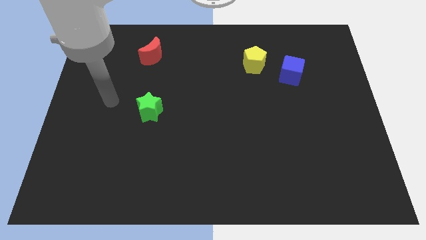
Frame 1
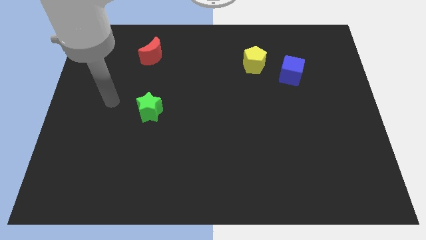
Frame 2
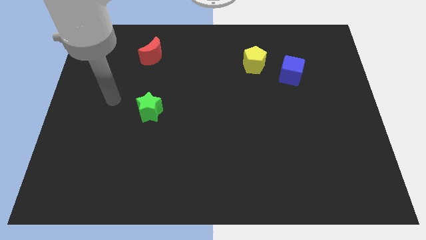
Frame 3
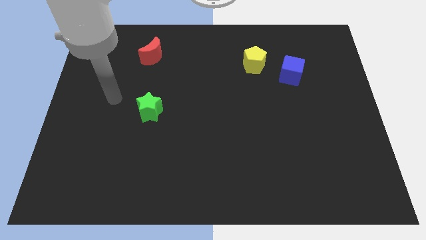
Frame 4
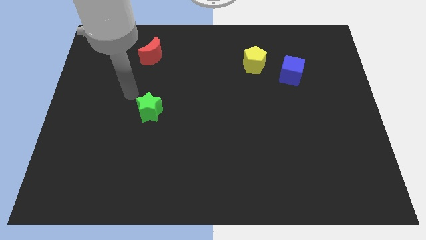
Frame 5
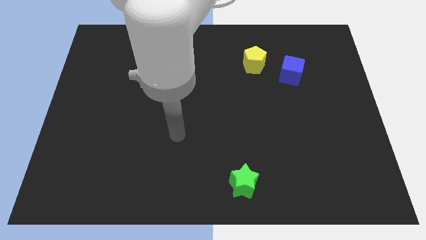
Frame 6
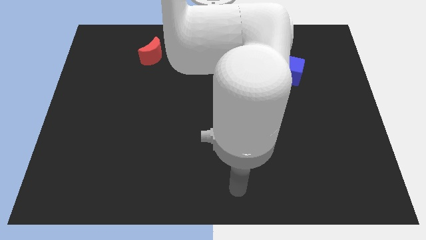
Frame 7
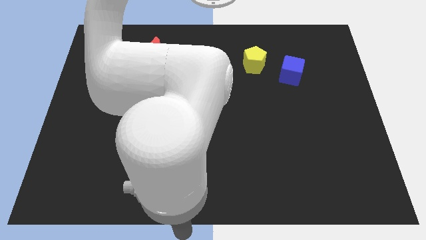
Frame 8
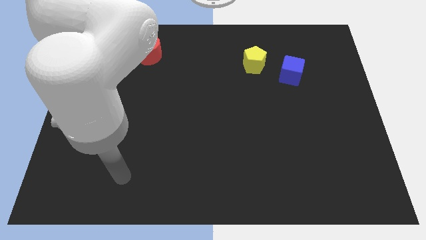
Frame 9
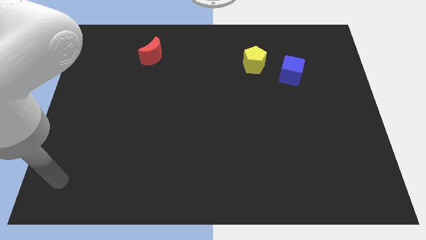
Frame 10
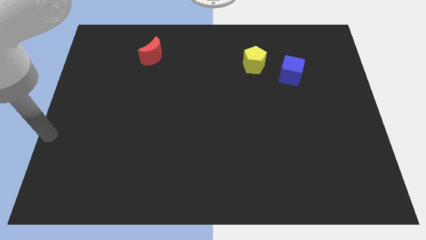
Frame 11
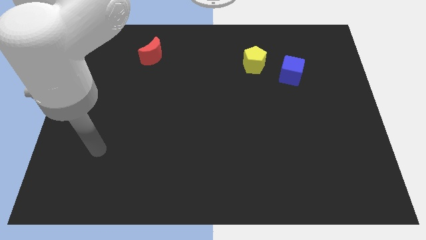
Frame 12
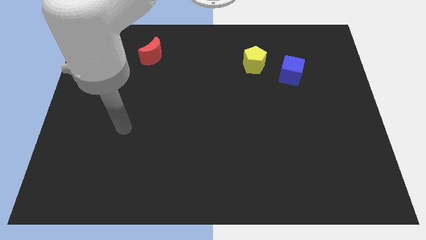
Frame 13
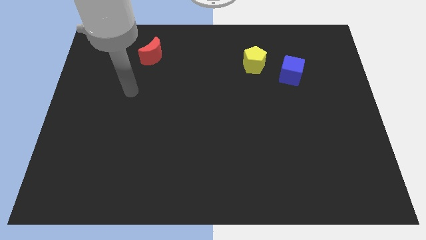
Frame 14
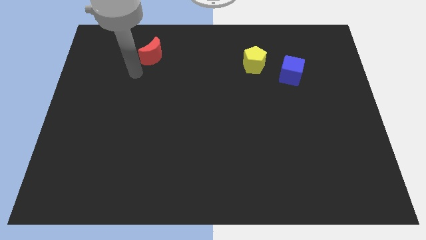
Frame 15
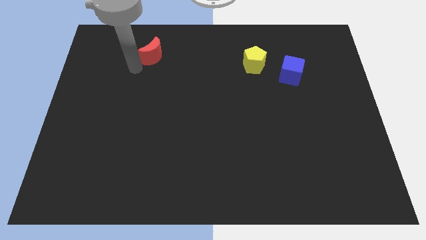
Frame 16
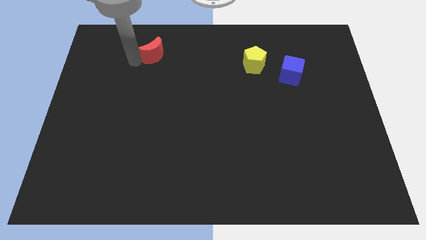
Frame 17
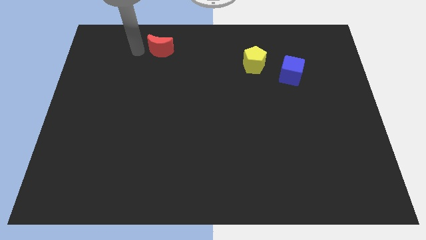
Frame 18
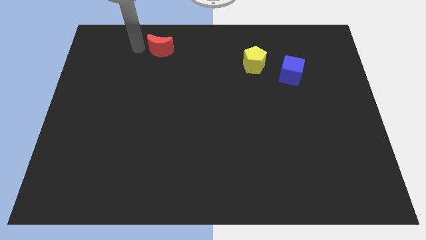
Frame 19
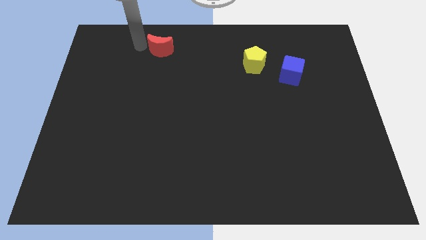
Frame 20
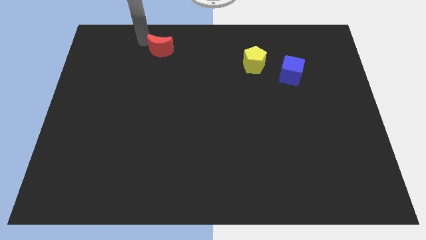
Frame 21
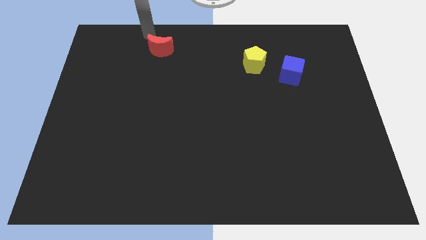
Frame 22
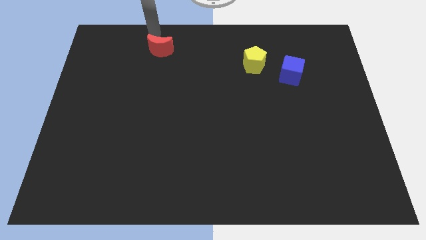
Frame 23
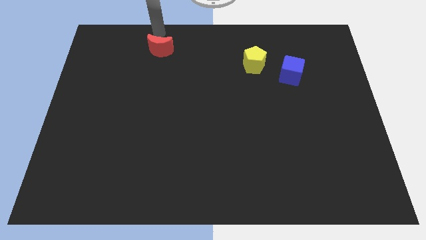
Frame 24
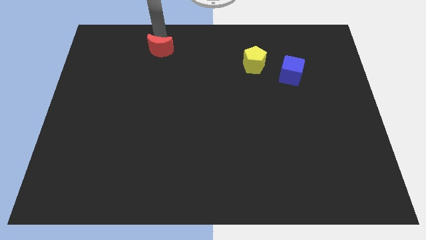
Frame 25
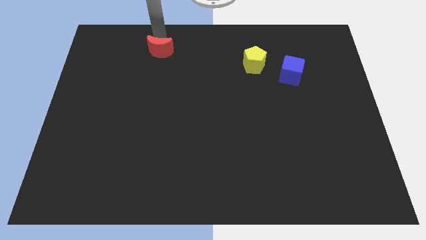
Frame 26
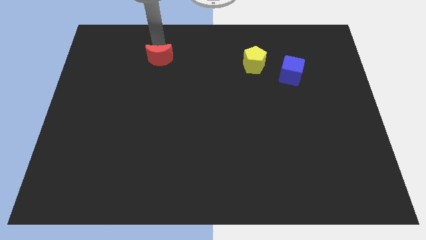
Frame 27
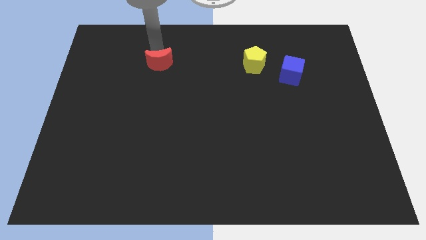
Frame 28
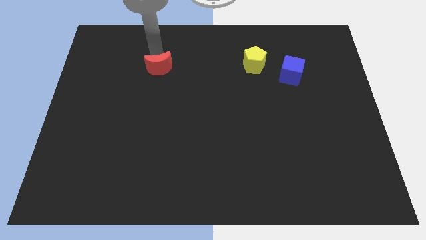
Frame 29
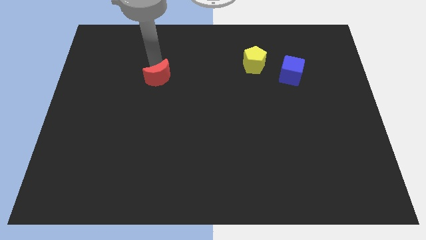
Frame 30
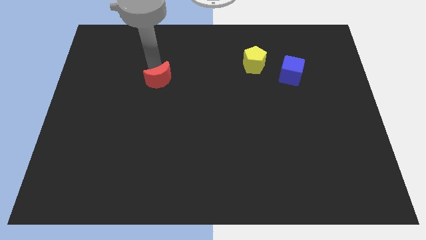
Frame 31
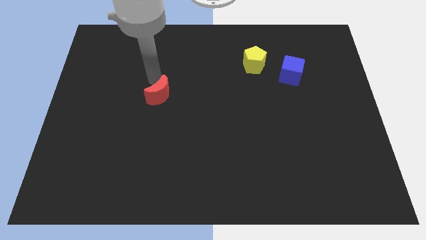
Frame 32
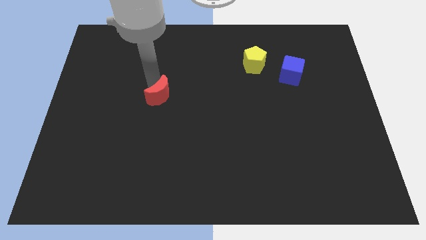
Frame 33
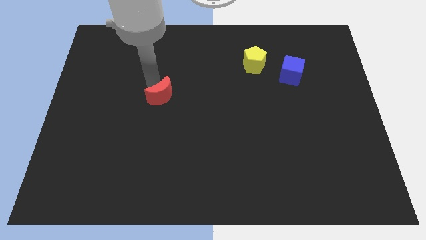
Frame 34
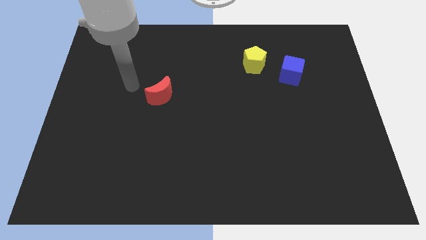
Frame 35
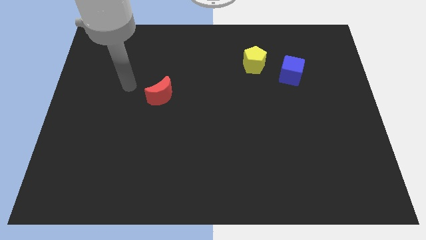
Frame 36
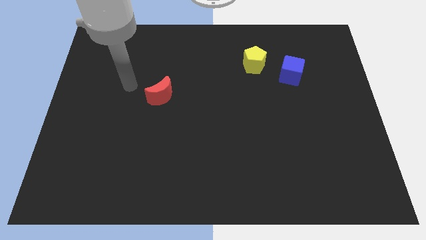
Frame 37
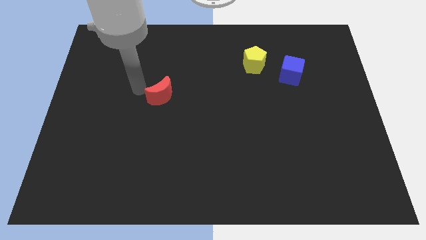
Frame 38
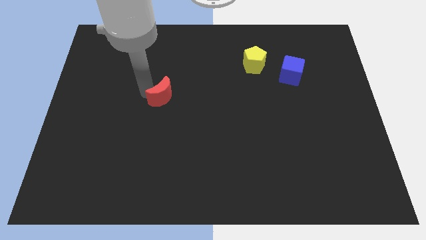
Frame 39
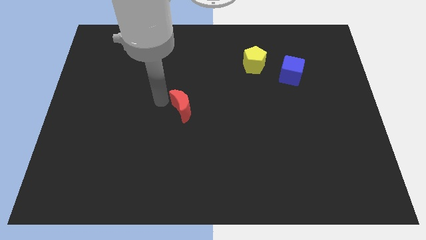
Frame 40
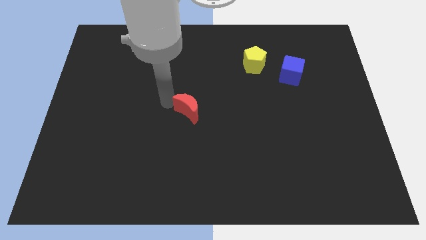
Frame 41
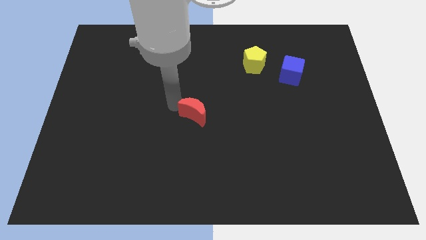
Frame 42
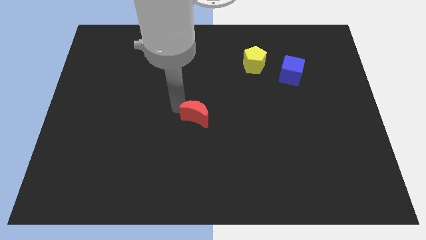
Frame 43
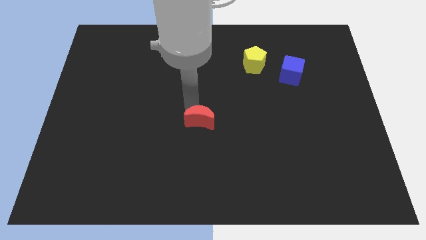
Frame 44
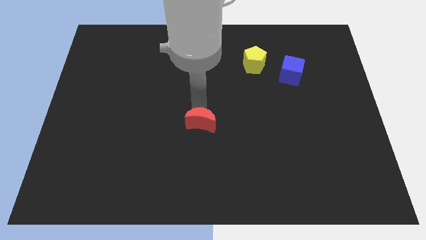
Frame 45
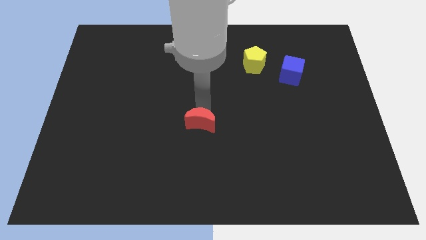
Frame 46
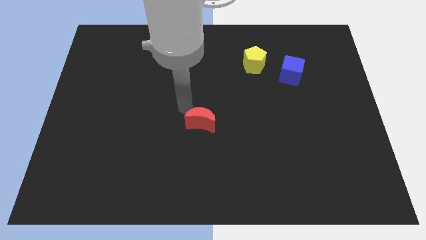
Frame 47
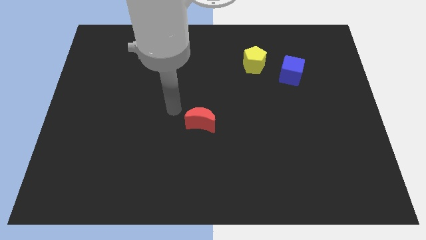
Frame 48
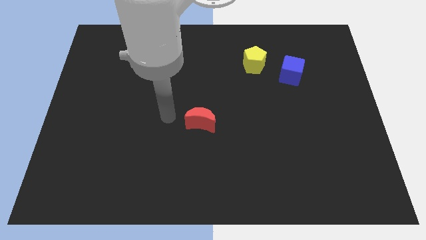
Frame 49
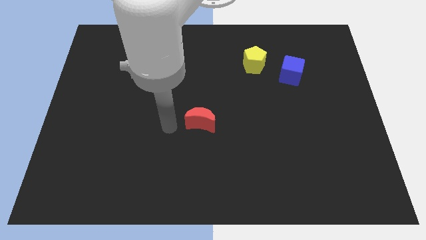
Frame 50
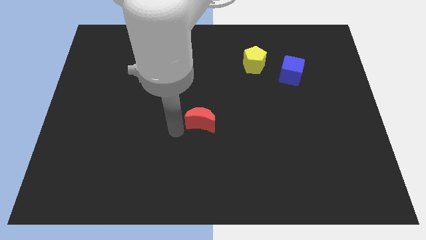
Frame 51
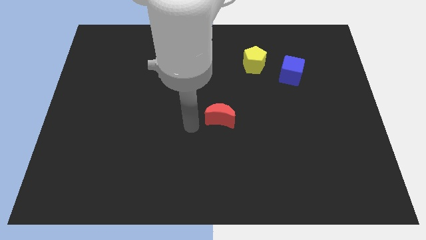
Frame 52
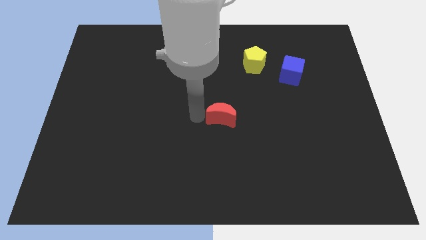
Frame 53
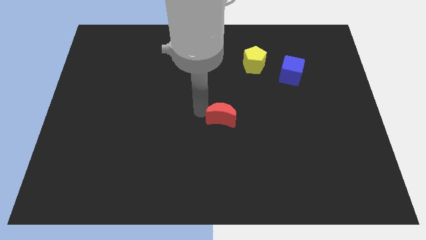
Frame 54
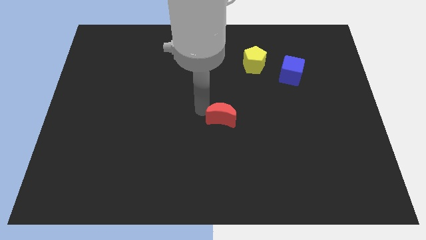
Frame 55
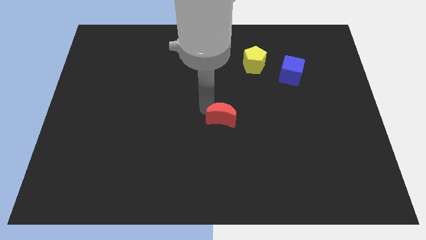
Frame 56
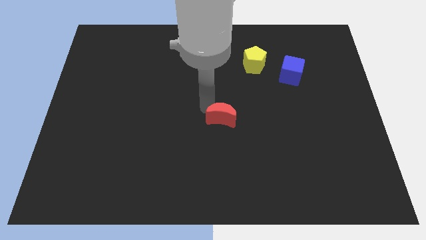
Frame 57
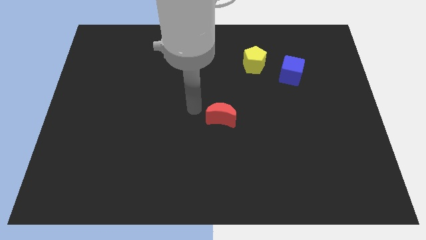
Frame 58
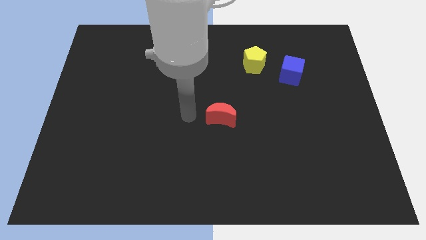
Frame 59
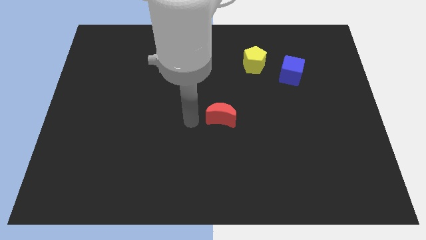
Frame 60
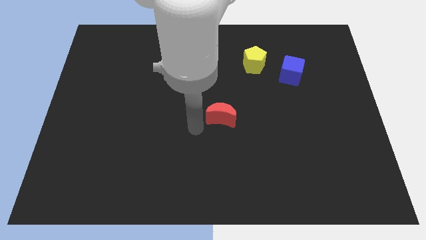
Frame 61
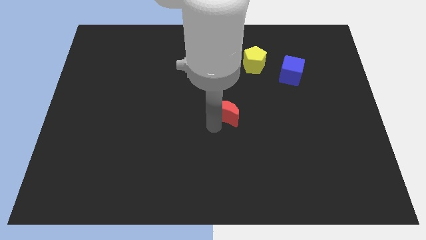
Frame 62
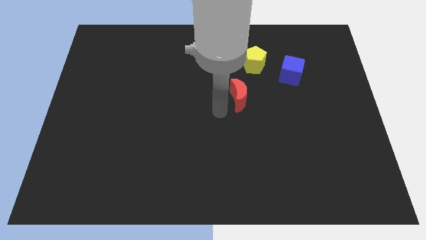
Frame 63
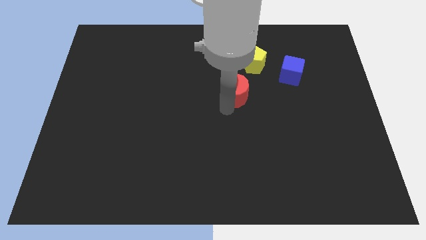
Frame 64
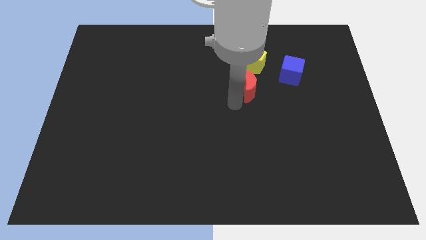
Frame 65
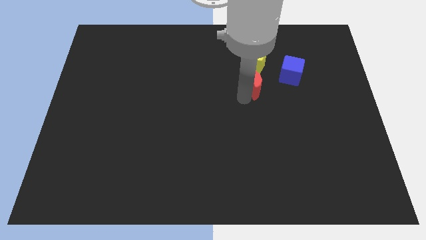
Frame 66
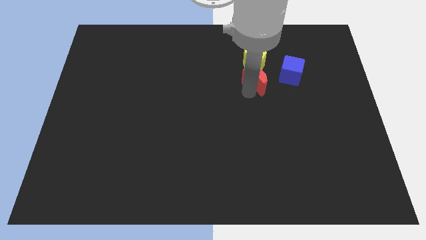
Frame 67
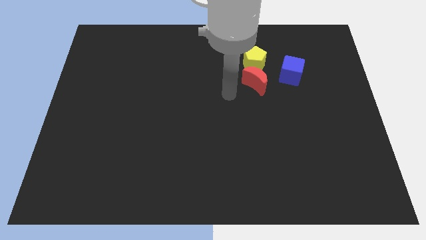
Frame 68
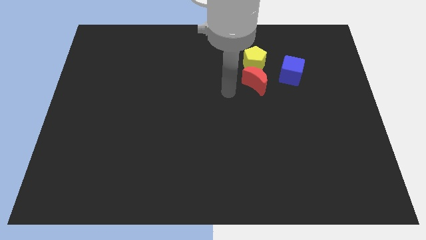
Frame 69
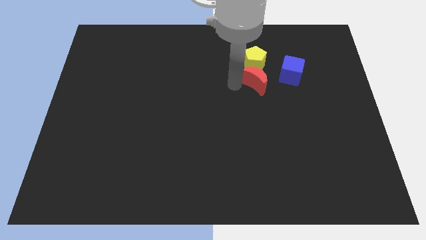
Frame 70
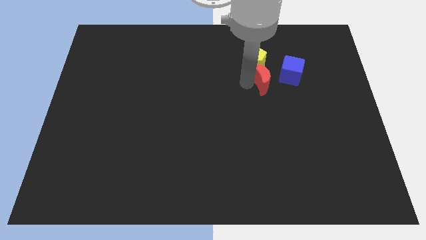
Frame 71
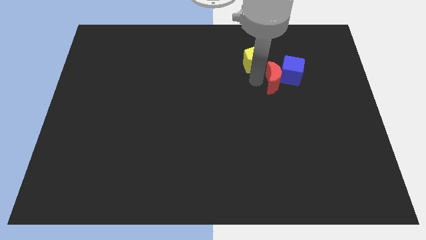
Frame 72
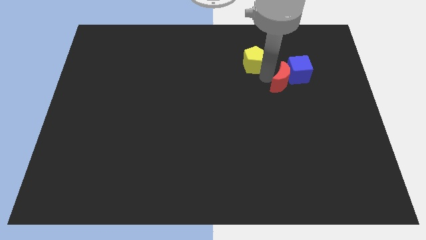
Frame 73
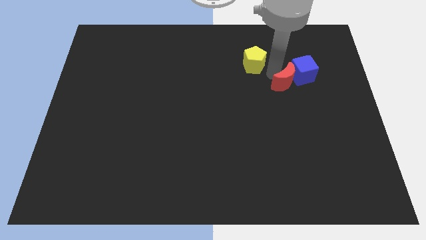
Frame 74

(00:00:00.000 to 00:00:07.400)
put the red block next to the blue block

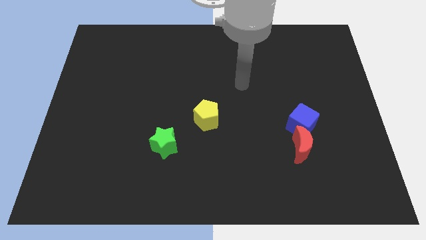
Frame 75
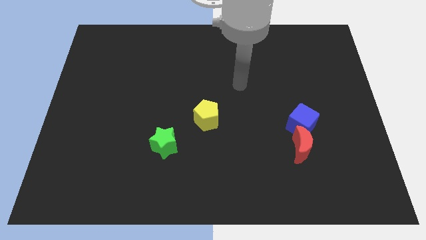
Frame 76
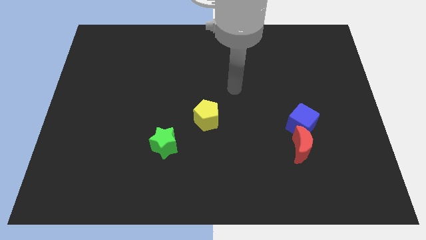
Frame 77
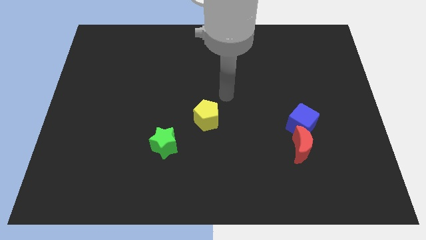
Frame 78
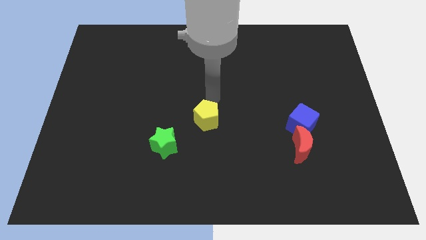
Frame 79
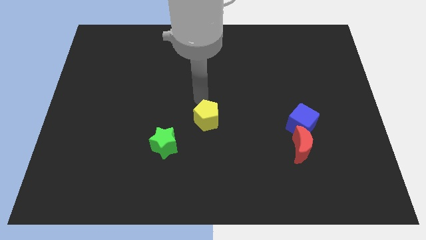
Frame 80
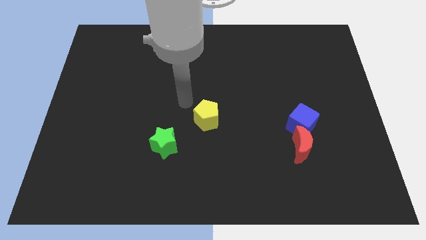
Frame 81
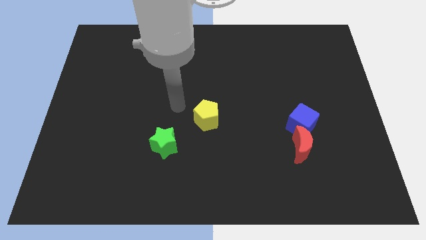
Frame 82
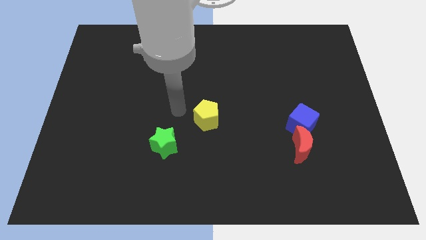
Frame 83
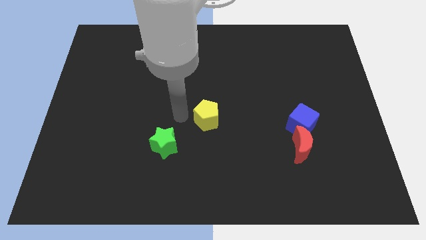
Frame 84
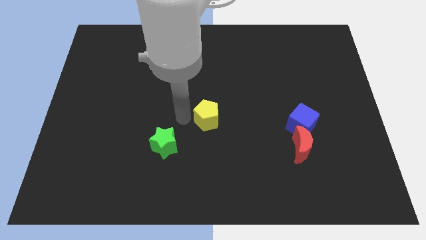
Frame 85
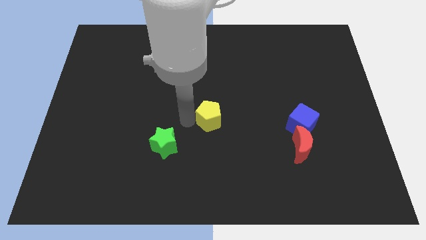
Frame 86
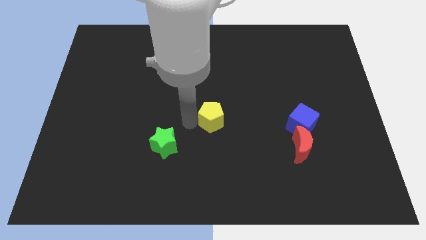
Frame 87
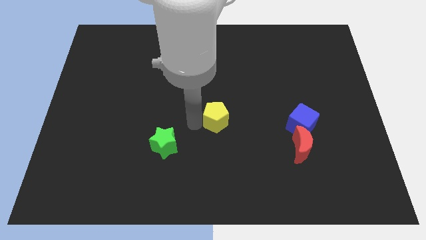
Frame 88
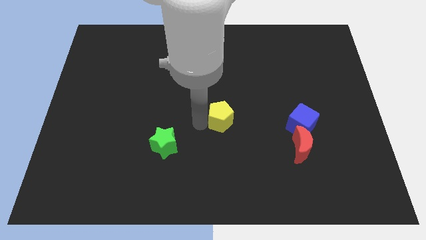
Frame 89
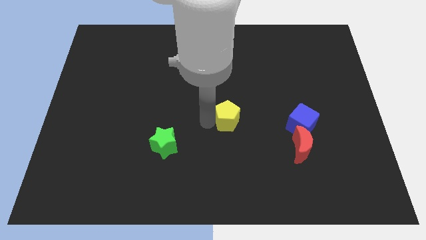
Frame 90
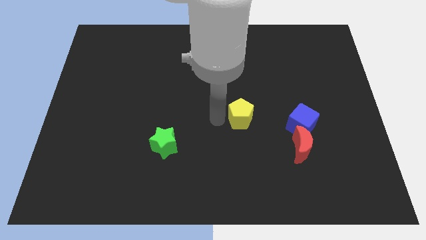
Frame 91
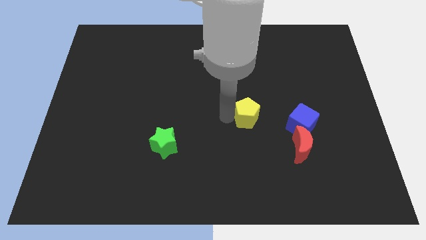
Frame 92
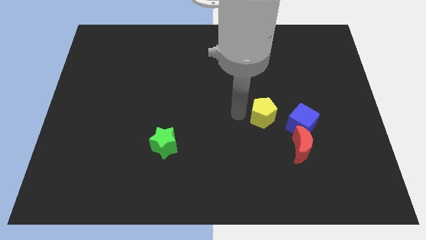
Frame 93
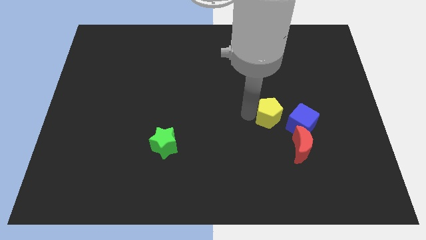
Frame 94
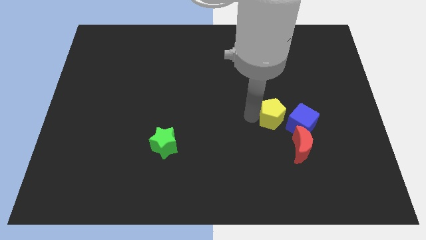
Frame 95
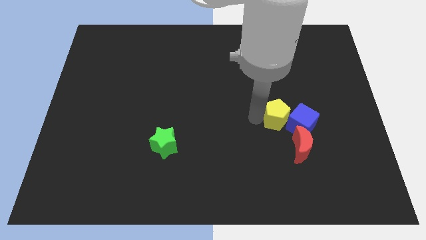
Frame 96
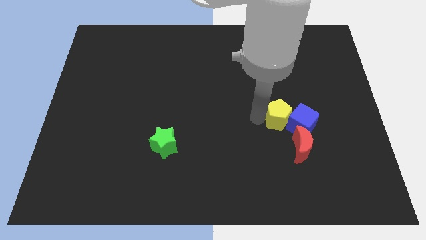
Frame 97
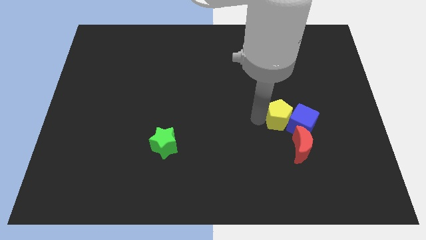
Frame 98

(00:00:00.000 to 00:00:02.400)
slide the yellow block next to the cube
